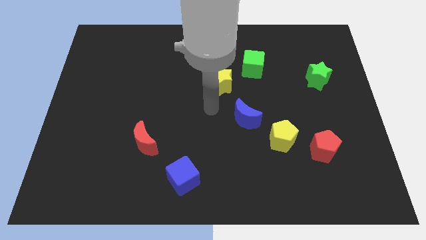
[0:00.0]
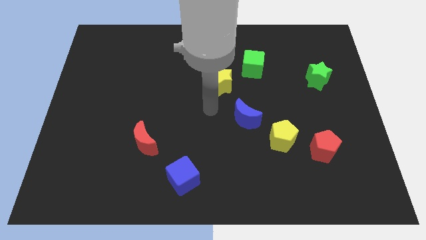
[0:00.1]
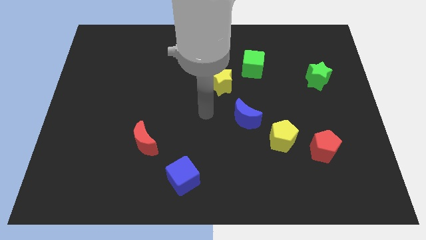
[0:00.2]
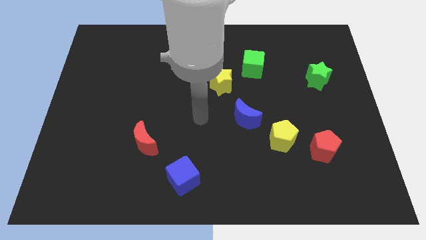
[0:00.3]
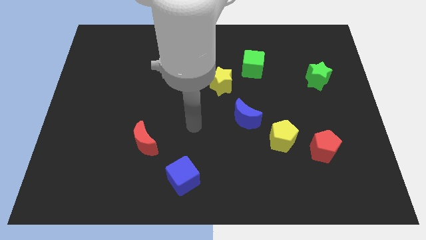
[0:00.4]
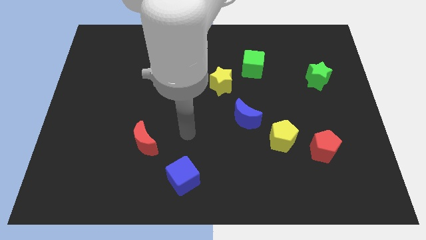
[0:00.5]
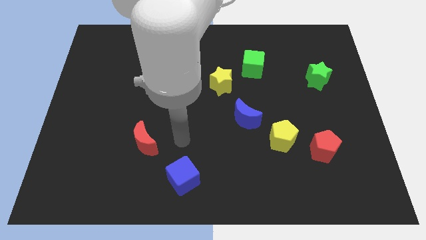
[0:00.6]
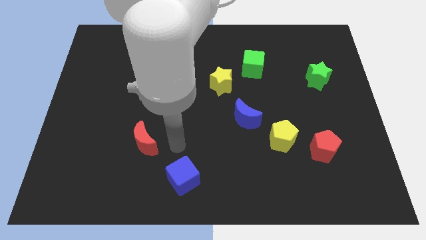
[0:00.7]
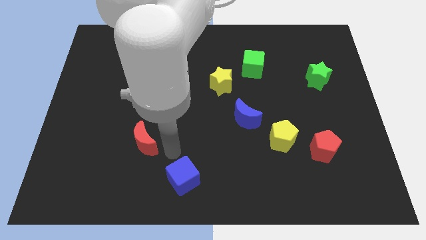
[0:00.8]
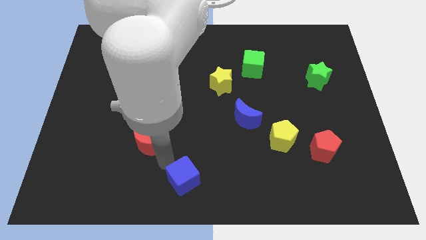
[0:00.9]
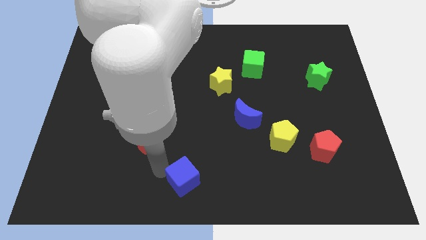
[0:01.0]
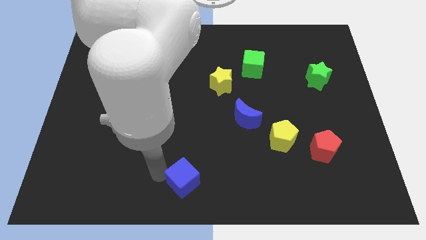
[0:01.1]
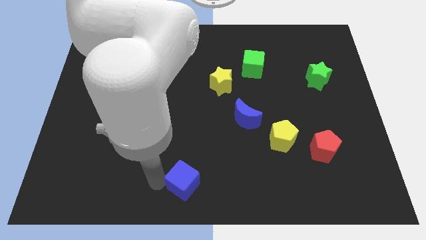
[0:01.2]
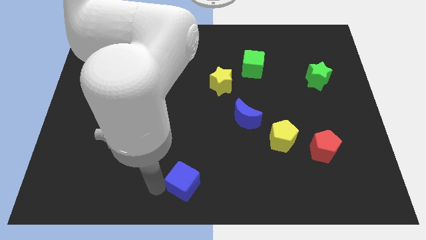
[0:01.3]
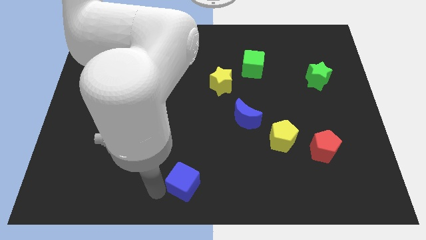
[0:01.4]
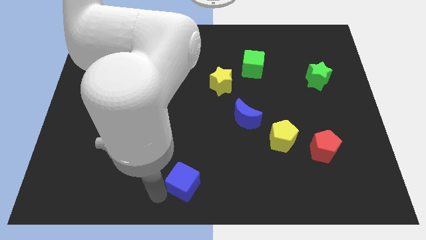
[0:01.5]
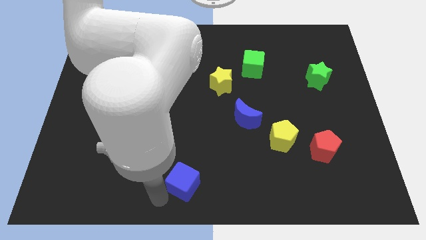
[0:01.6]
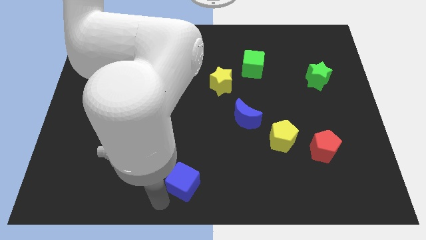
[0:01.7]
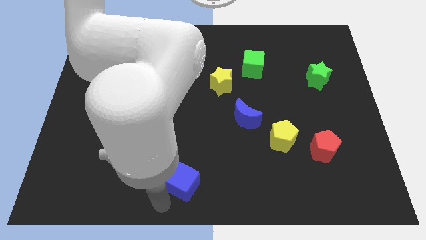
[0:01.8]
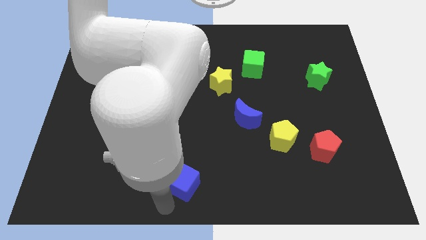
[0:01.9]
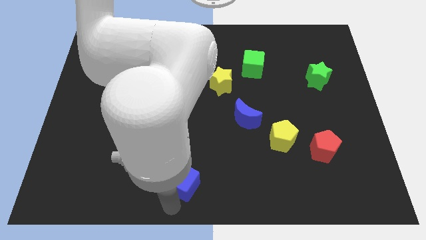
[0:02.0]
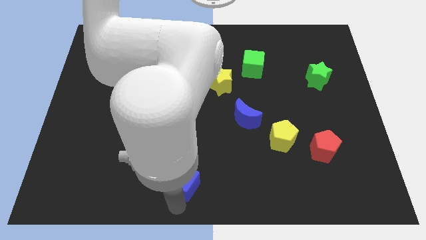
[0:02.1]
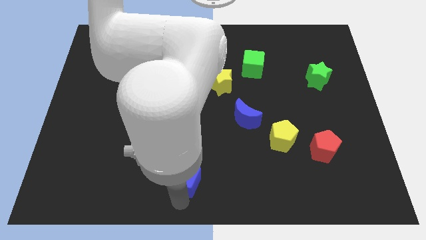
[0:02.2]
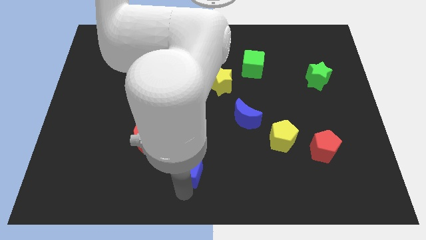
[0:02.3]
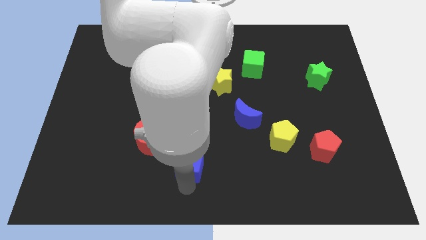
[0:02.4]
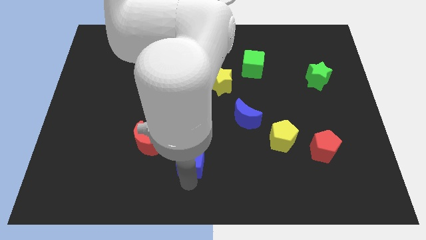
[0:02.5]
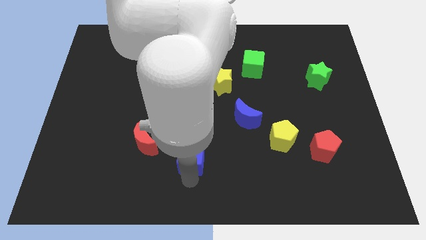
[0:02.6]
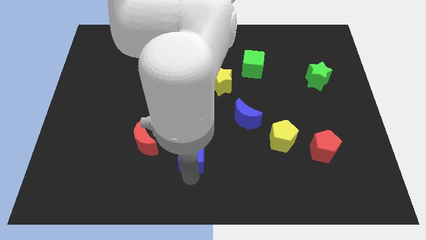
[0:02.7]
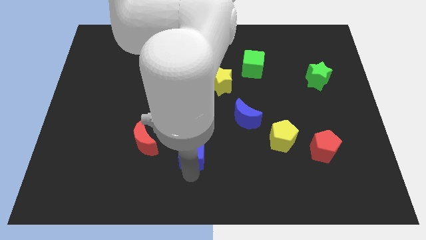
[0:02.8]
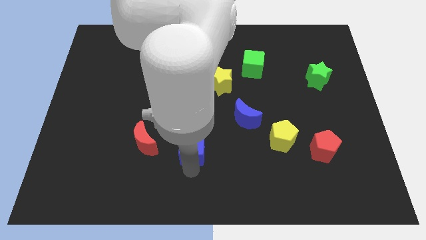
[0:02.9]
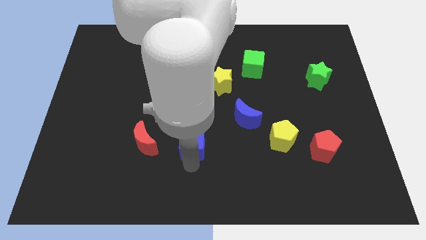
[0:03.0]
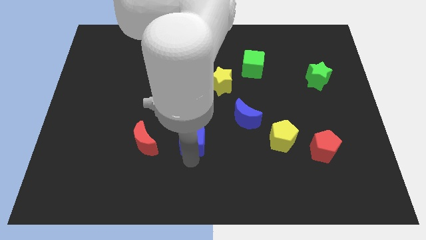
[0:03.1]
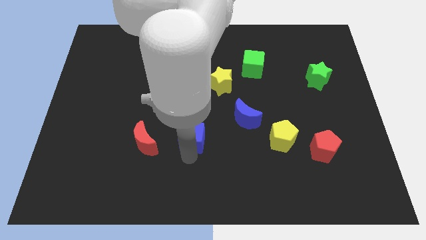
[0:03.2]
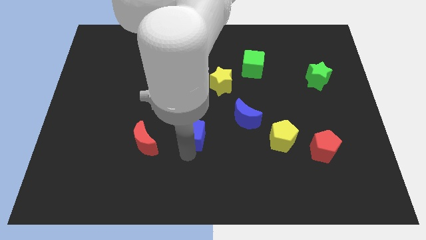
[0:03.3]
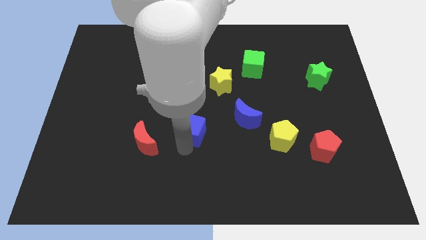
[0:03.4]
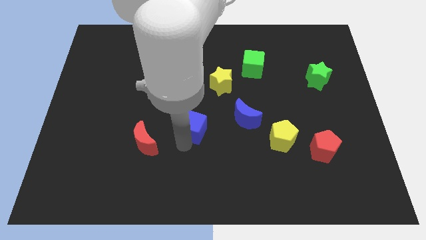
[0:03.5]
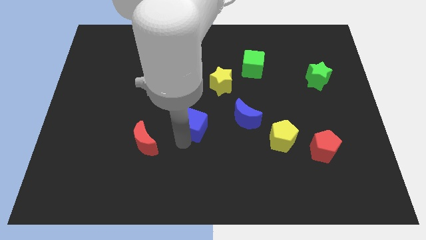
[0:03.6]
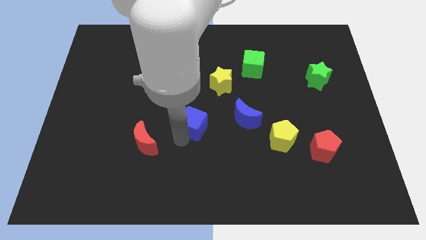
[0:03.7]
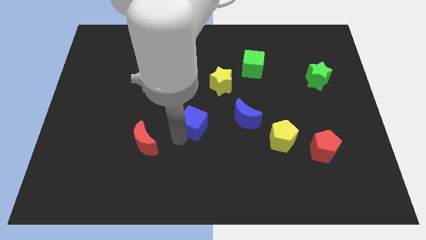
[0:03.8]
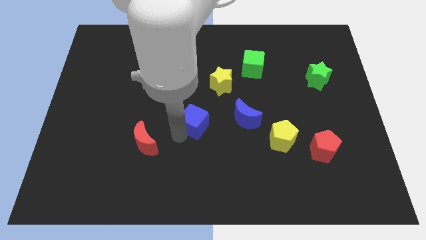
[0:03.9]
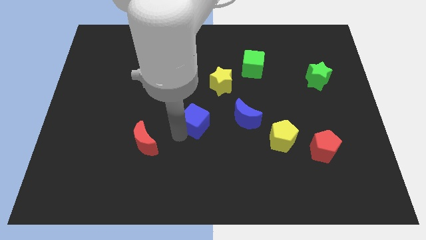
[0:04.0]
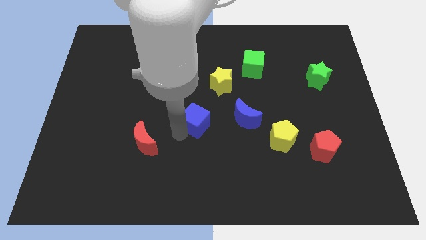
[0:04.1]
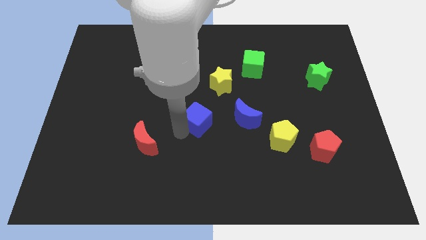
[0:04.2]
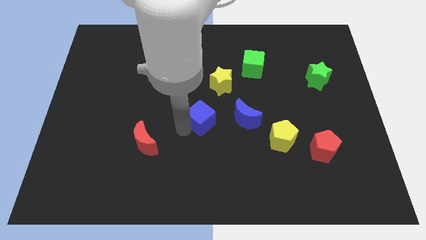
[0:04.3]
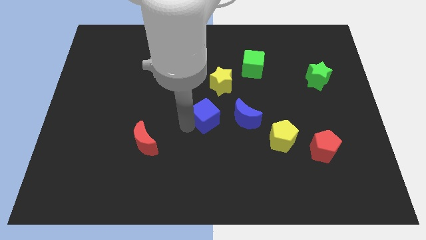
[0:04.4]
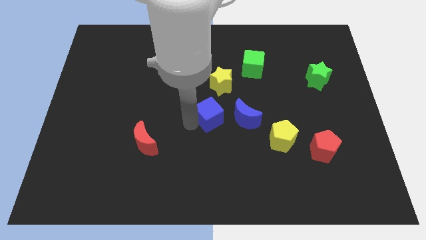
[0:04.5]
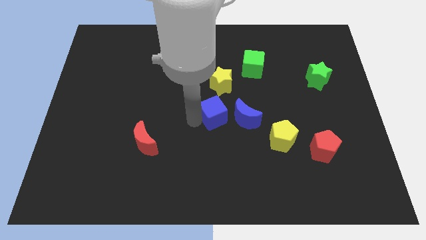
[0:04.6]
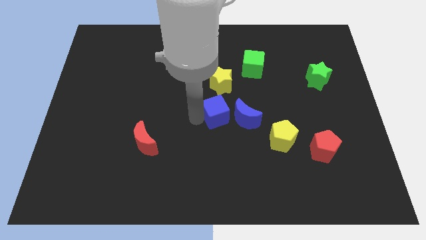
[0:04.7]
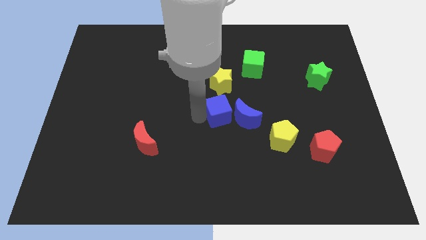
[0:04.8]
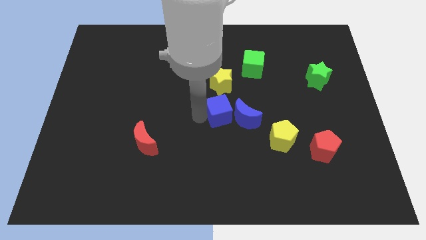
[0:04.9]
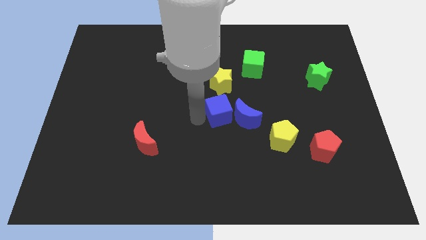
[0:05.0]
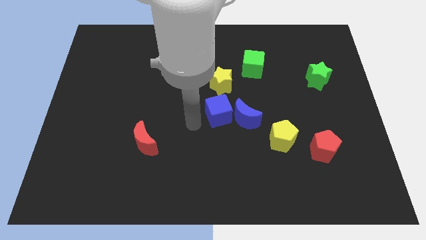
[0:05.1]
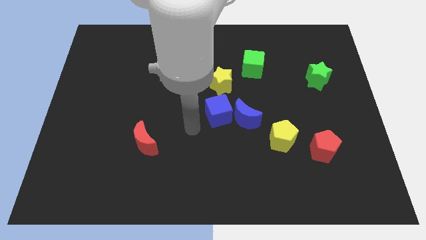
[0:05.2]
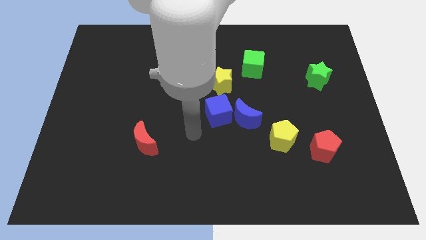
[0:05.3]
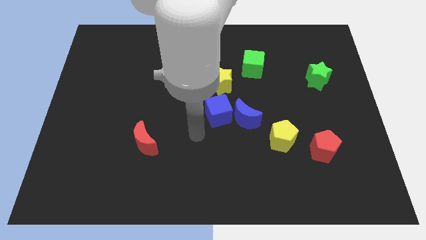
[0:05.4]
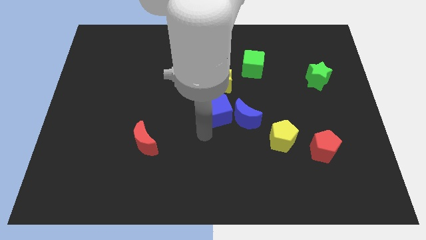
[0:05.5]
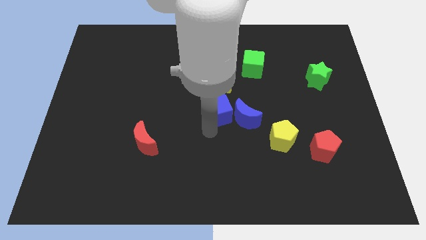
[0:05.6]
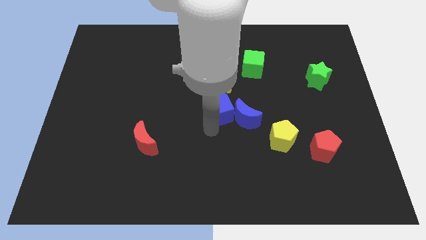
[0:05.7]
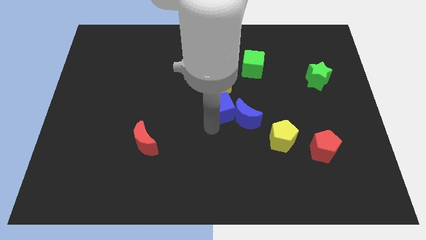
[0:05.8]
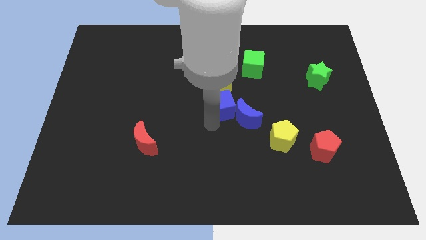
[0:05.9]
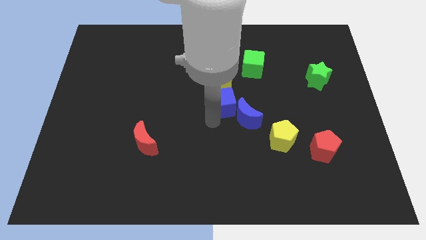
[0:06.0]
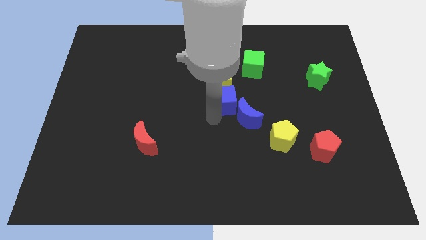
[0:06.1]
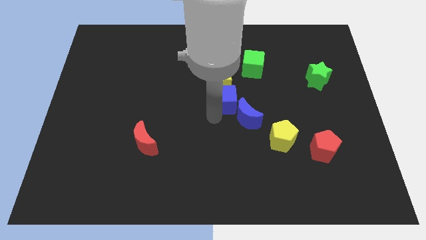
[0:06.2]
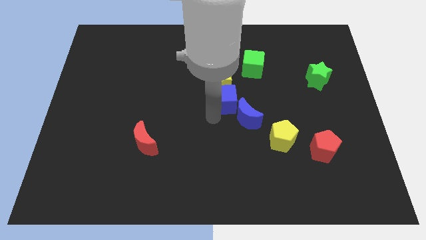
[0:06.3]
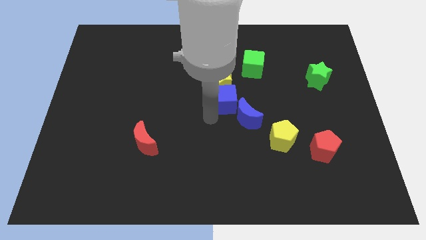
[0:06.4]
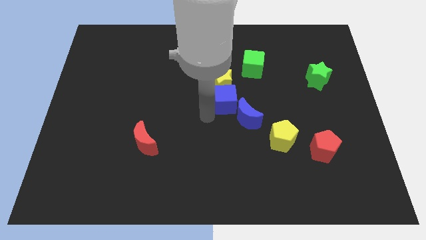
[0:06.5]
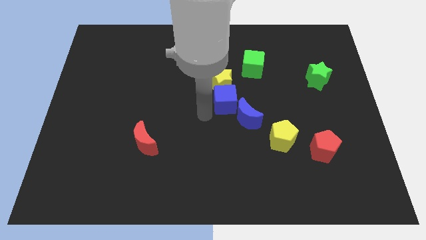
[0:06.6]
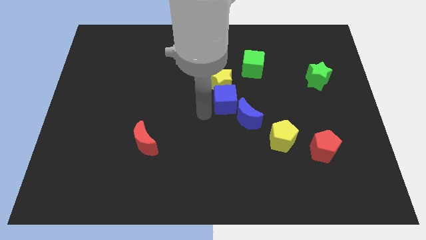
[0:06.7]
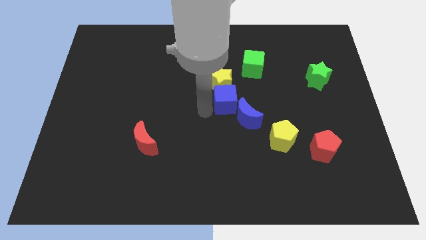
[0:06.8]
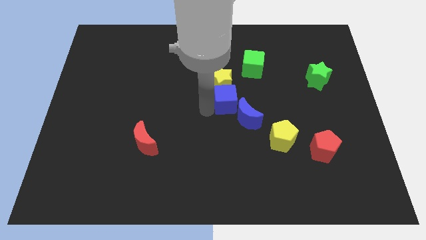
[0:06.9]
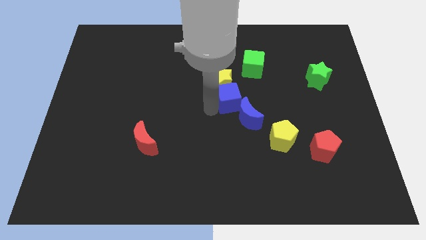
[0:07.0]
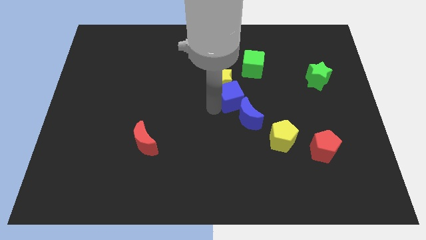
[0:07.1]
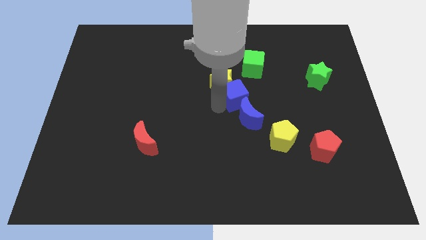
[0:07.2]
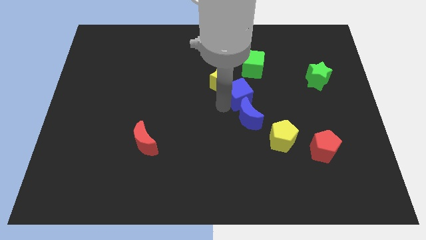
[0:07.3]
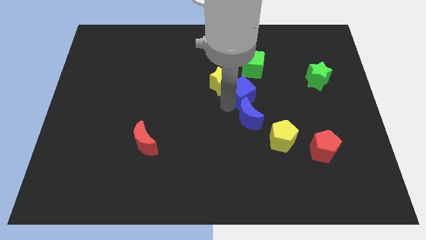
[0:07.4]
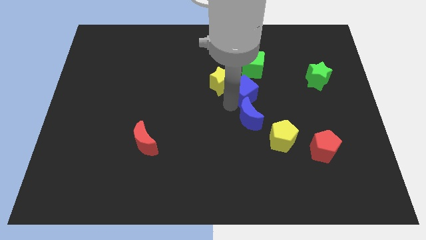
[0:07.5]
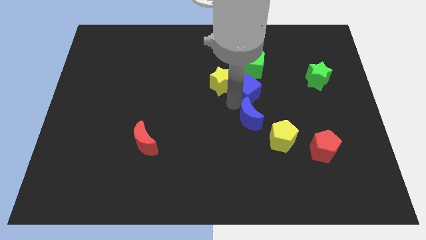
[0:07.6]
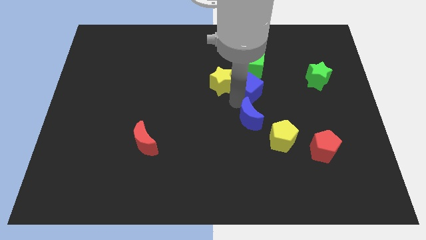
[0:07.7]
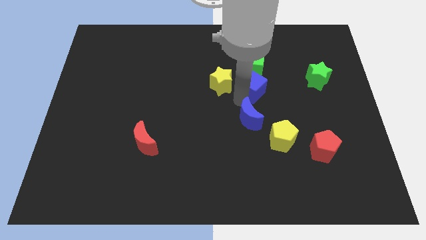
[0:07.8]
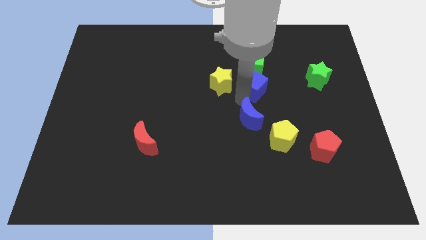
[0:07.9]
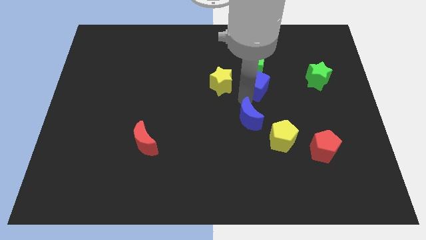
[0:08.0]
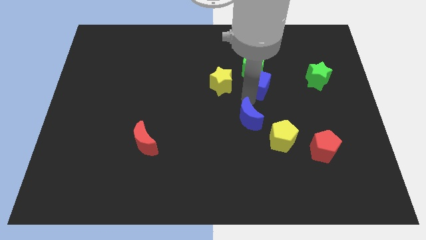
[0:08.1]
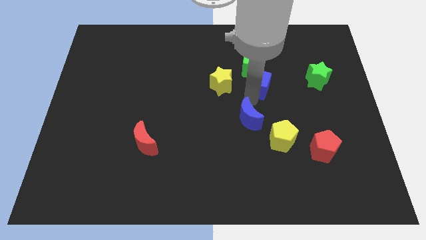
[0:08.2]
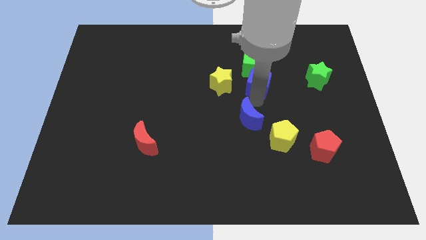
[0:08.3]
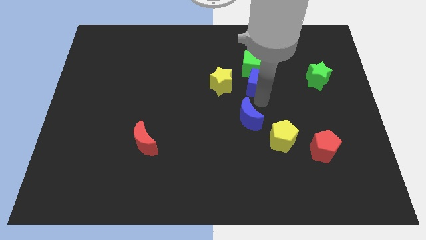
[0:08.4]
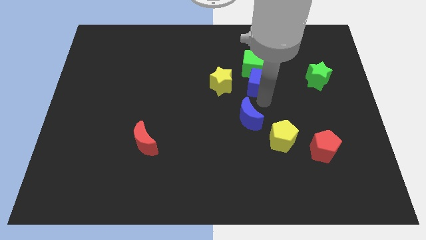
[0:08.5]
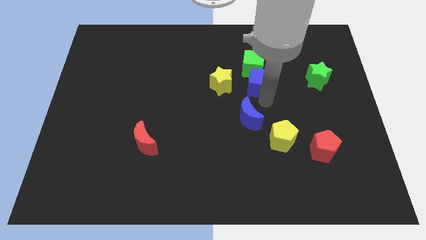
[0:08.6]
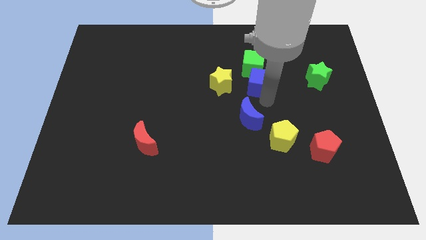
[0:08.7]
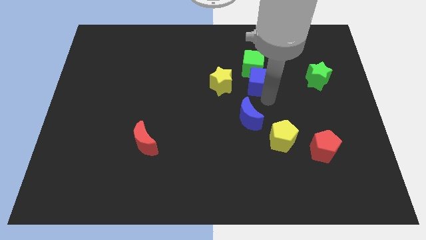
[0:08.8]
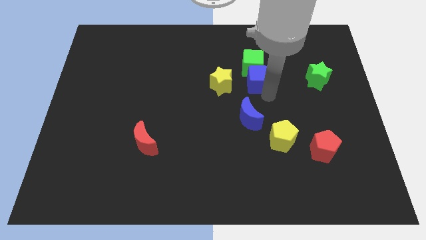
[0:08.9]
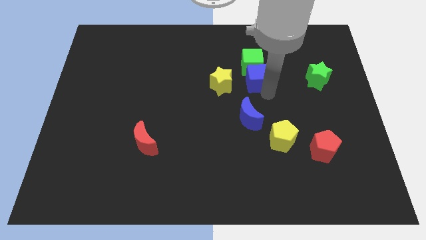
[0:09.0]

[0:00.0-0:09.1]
push the blue cube close to the green cube
